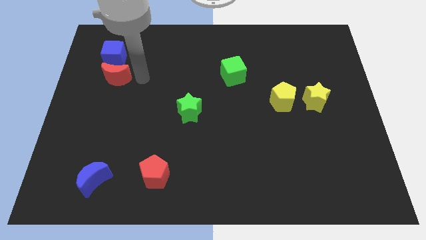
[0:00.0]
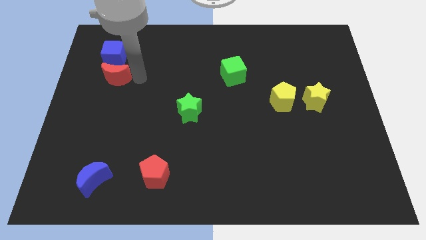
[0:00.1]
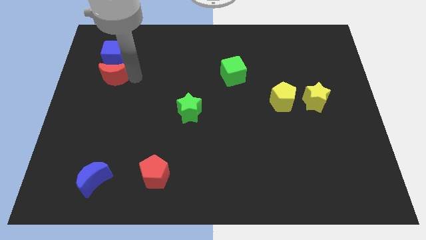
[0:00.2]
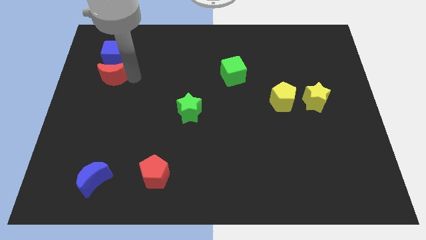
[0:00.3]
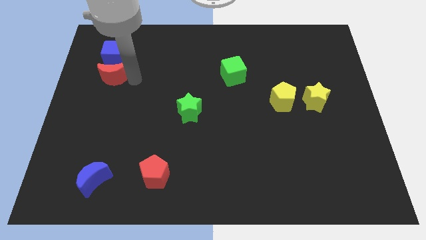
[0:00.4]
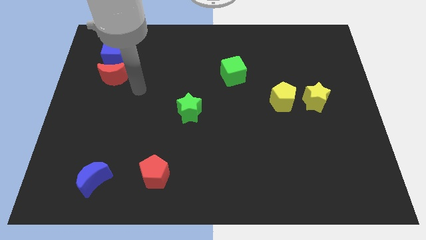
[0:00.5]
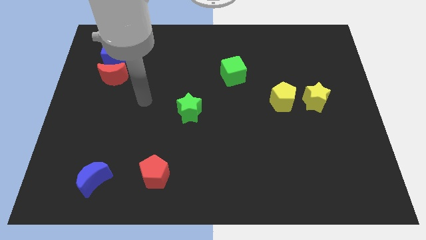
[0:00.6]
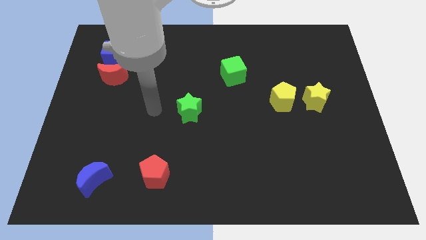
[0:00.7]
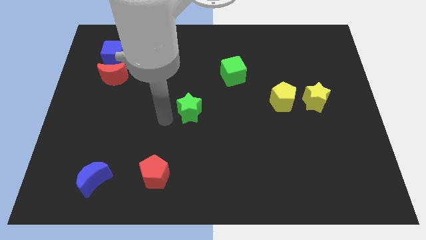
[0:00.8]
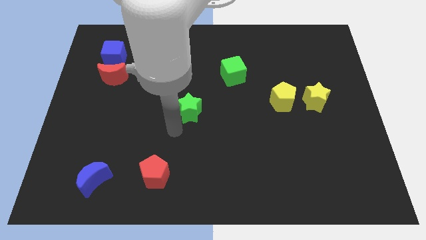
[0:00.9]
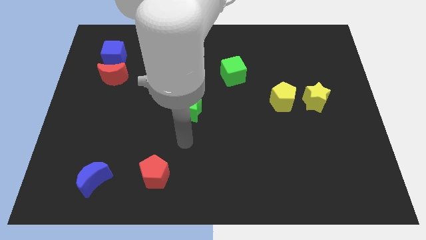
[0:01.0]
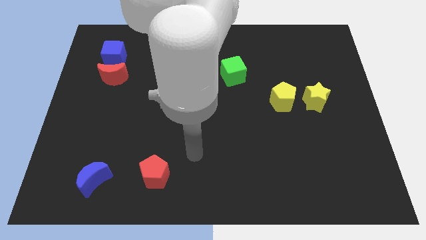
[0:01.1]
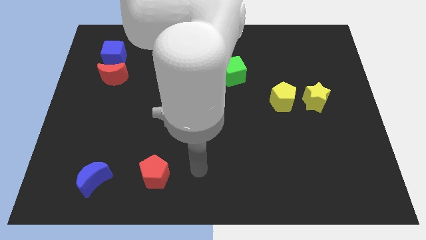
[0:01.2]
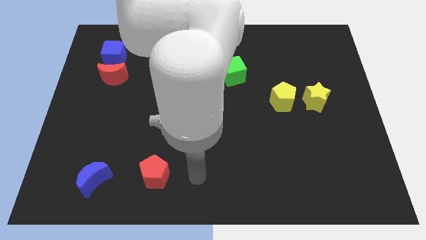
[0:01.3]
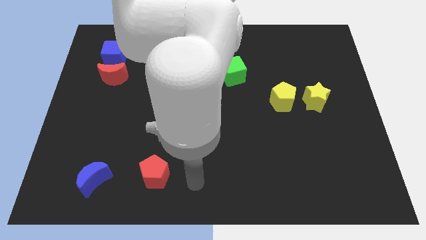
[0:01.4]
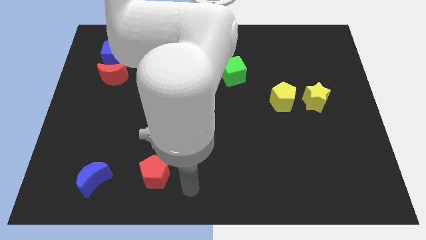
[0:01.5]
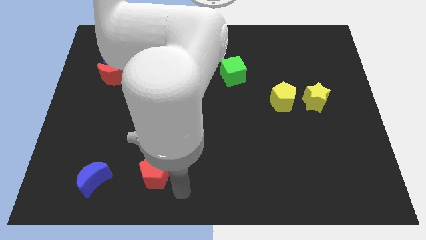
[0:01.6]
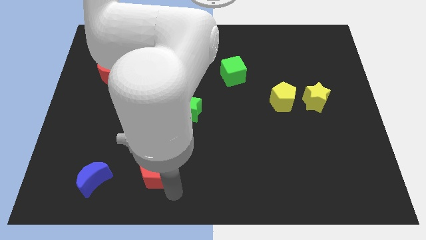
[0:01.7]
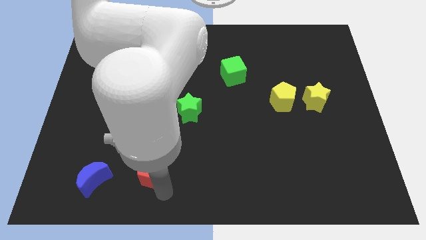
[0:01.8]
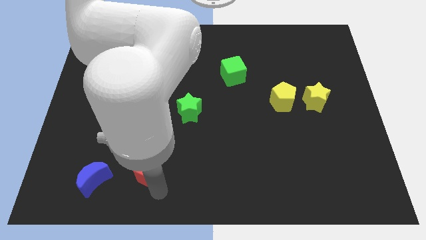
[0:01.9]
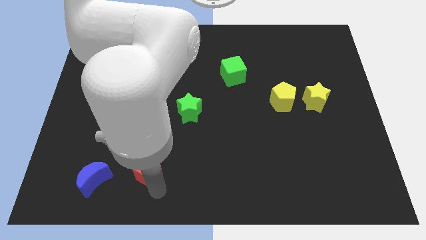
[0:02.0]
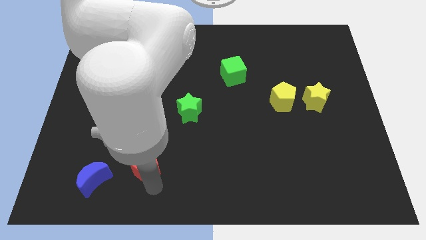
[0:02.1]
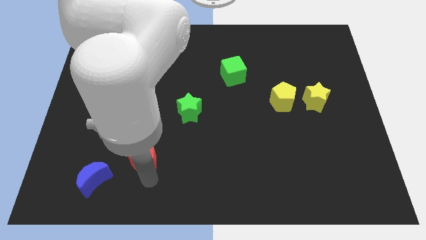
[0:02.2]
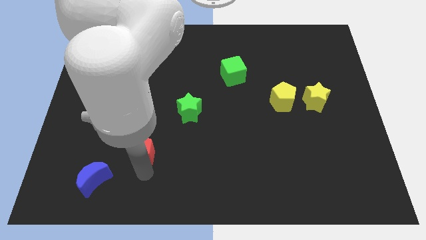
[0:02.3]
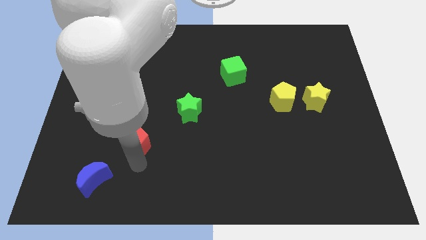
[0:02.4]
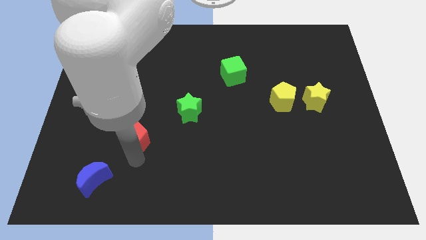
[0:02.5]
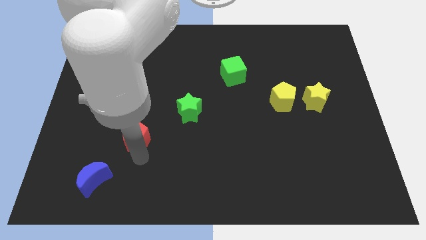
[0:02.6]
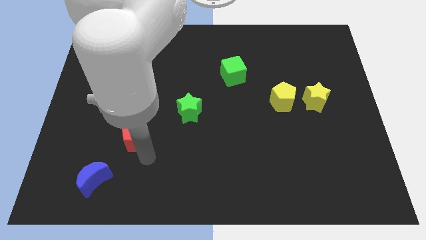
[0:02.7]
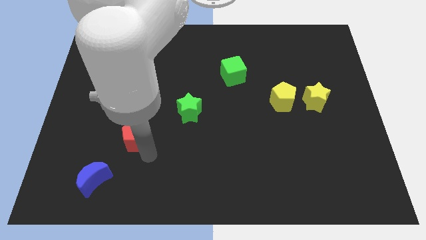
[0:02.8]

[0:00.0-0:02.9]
place the red pentagon in between the blue moon and green star

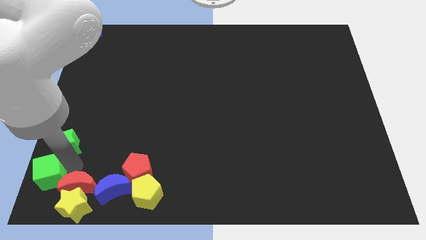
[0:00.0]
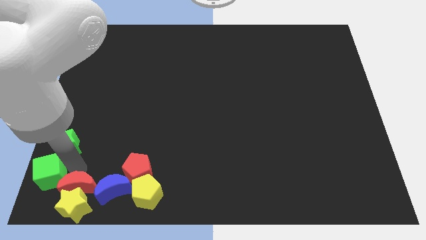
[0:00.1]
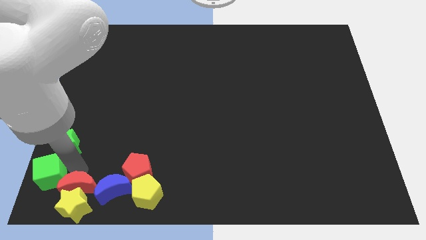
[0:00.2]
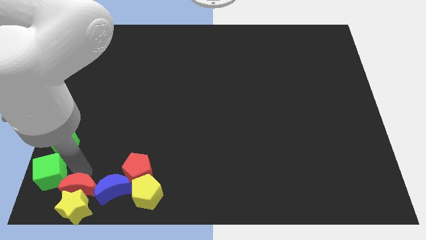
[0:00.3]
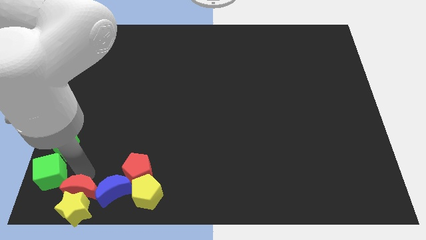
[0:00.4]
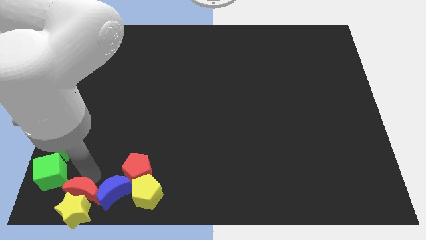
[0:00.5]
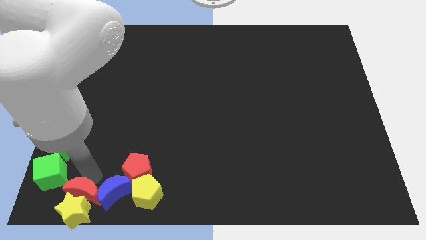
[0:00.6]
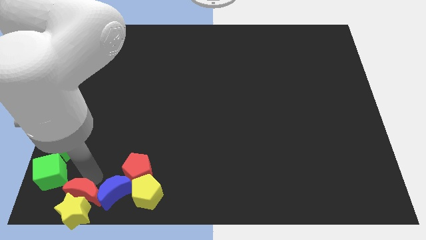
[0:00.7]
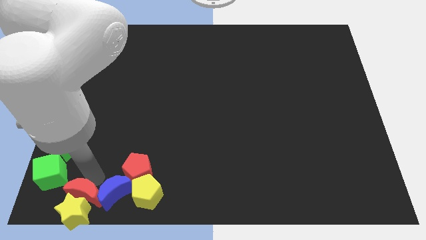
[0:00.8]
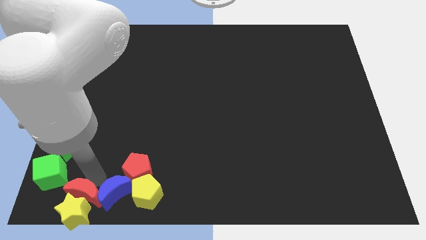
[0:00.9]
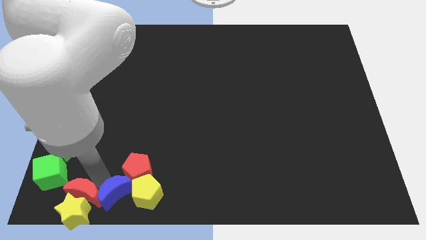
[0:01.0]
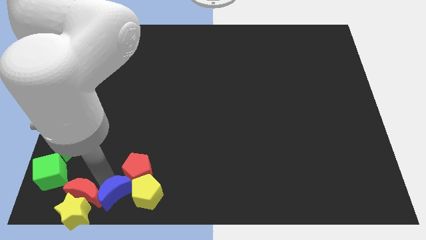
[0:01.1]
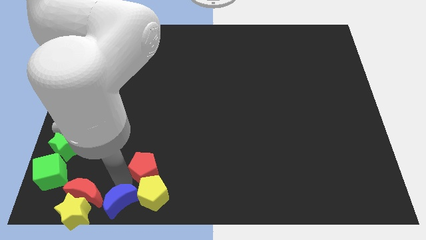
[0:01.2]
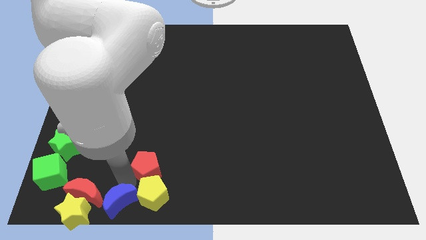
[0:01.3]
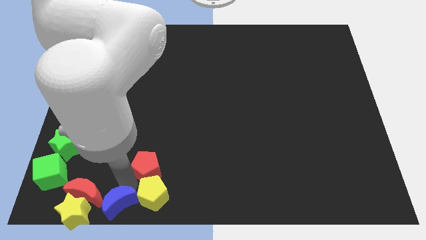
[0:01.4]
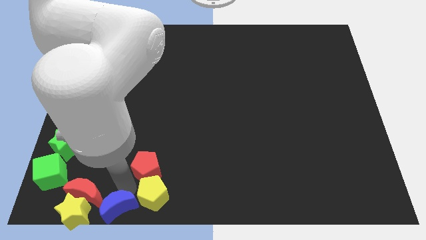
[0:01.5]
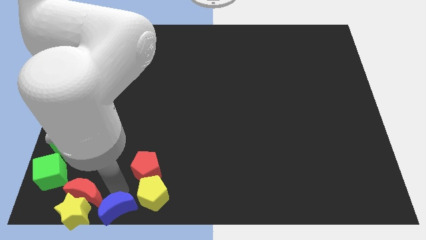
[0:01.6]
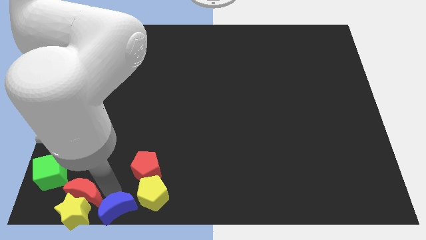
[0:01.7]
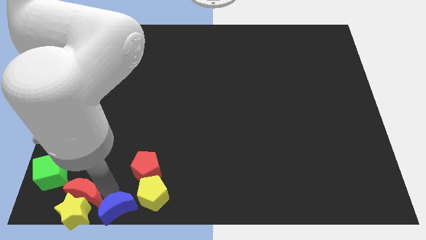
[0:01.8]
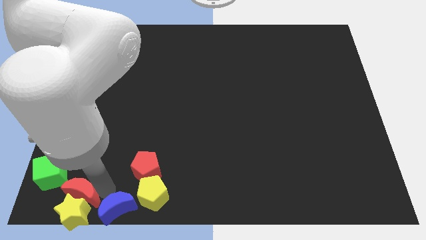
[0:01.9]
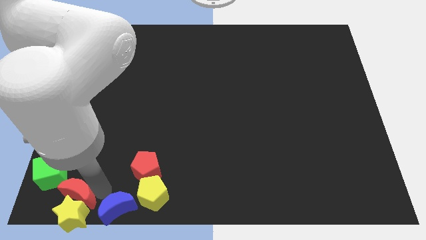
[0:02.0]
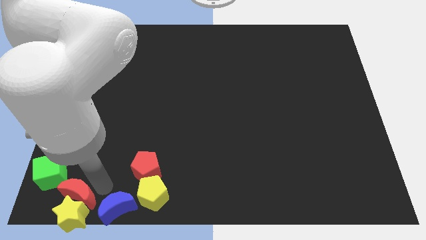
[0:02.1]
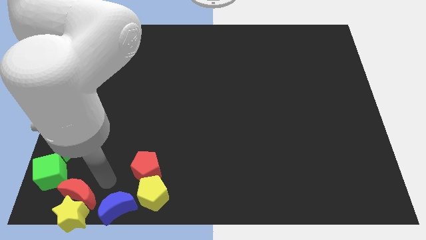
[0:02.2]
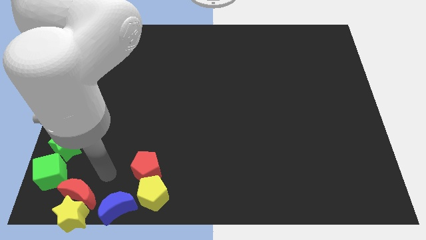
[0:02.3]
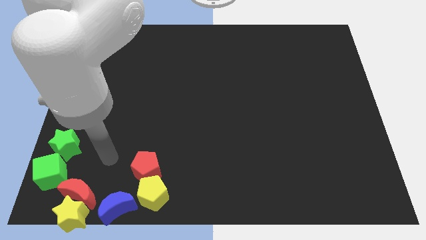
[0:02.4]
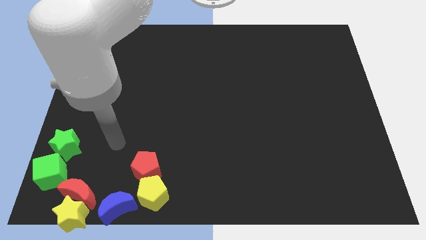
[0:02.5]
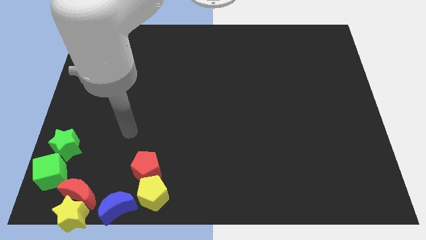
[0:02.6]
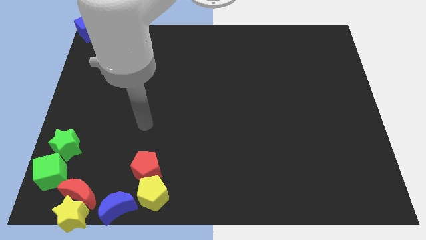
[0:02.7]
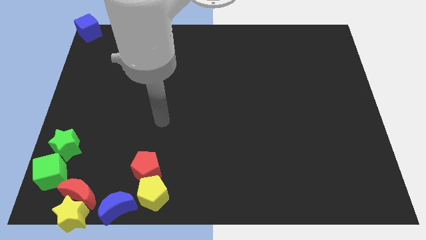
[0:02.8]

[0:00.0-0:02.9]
push the group of blocks towards the bottom

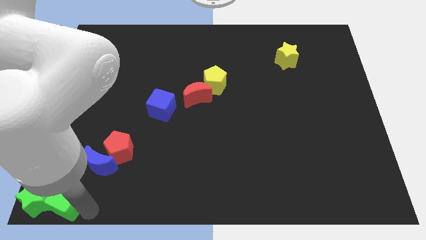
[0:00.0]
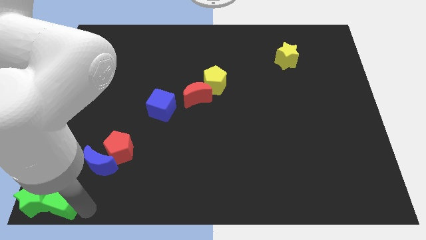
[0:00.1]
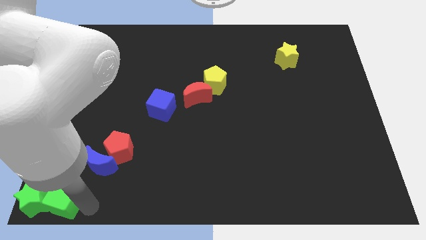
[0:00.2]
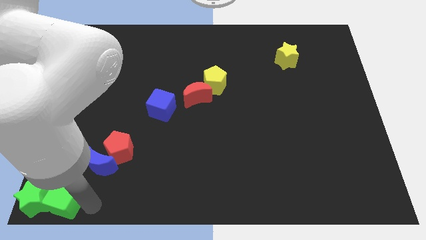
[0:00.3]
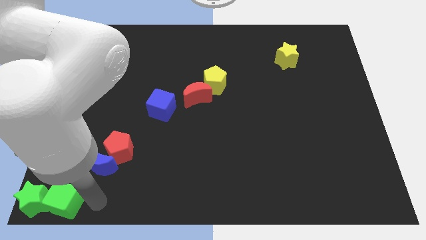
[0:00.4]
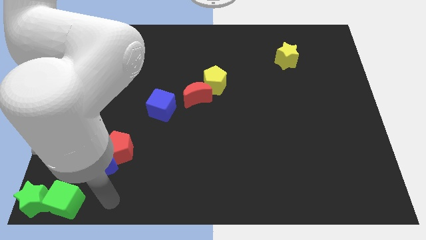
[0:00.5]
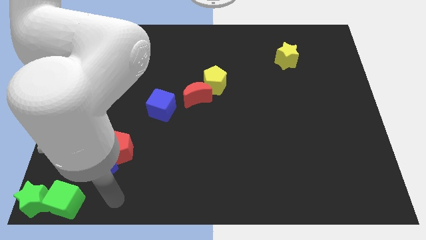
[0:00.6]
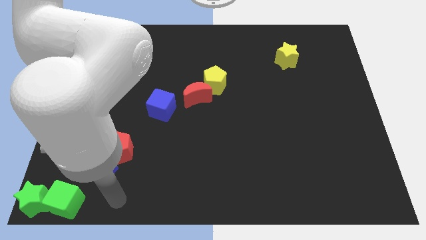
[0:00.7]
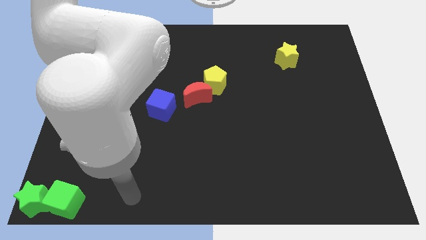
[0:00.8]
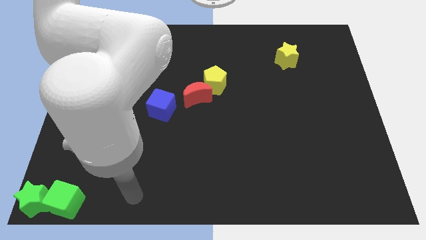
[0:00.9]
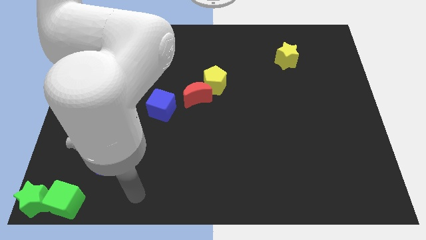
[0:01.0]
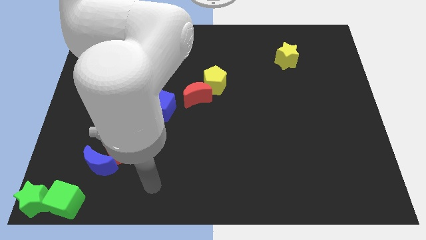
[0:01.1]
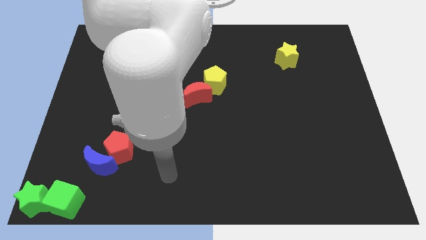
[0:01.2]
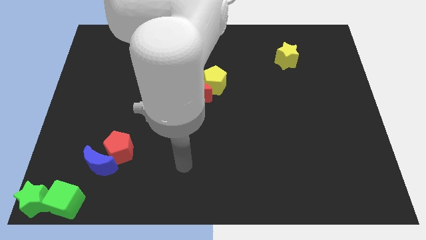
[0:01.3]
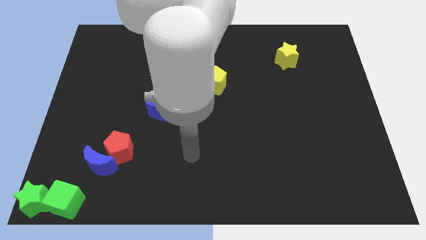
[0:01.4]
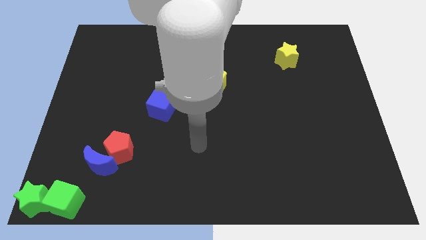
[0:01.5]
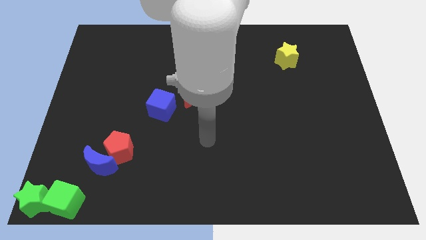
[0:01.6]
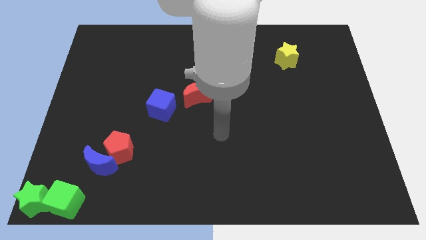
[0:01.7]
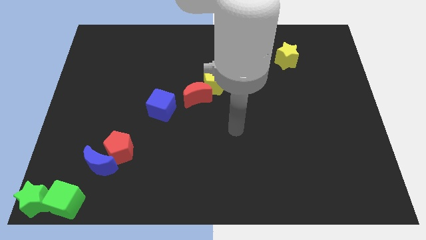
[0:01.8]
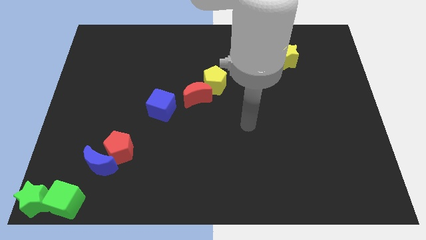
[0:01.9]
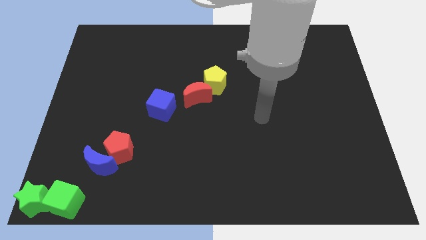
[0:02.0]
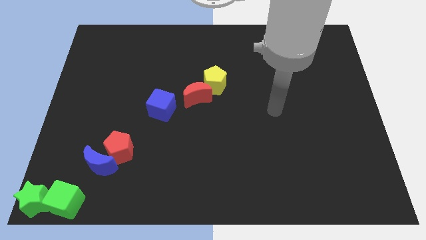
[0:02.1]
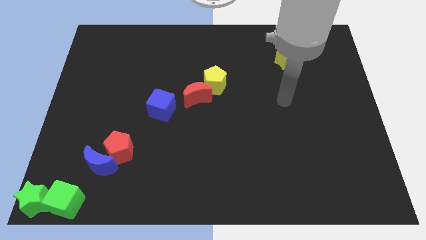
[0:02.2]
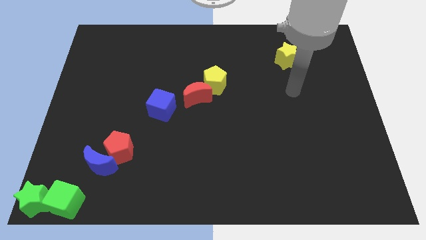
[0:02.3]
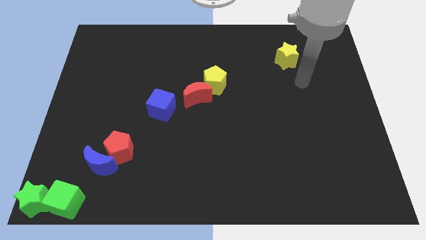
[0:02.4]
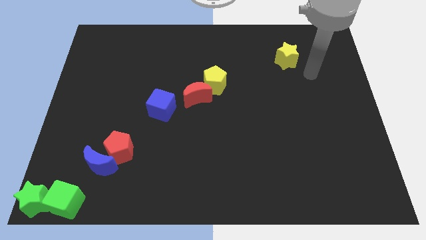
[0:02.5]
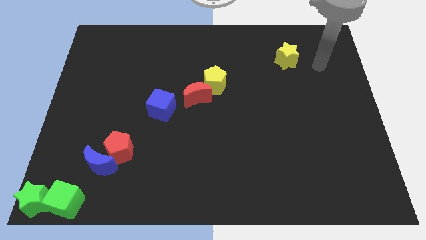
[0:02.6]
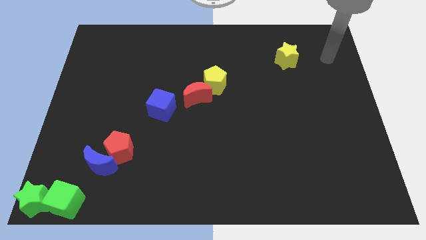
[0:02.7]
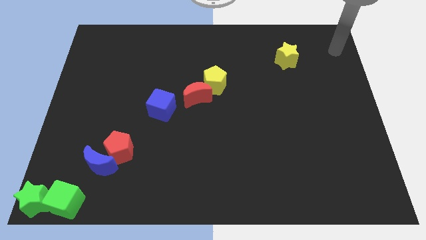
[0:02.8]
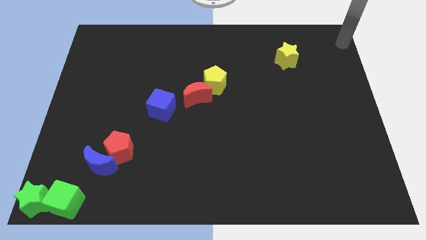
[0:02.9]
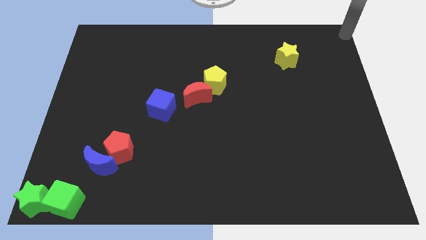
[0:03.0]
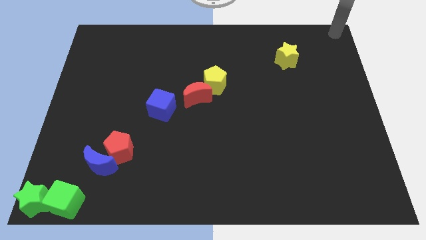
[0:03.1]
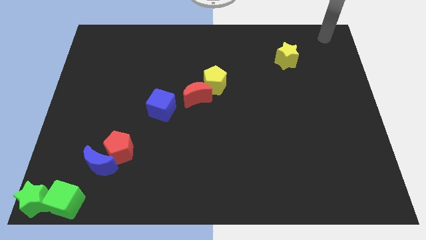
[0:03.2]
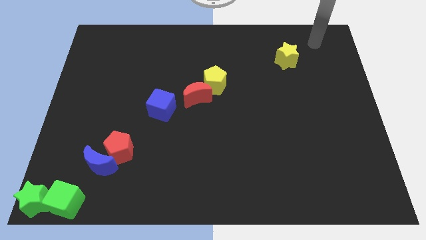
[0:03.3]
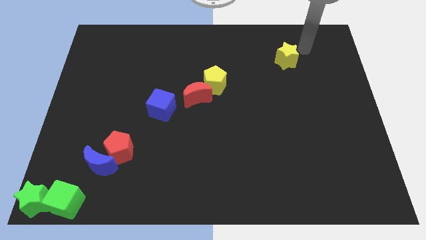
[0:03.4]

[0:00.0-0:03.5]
move your arm and point above the yellow star
